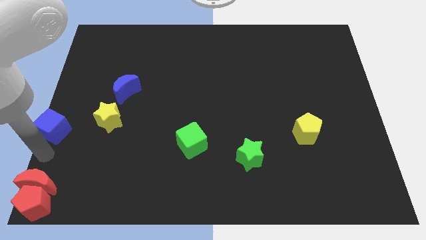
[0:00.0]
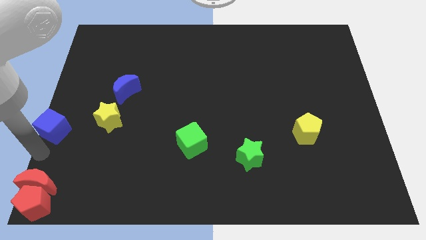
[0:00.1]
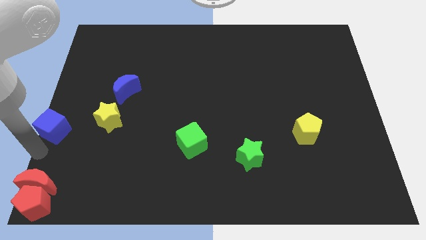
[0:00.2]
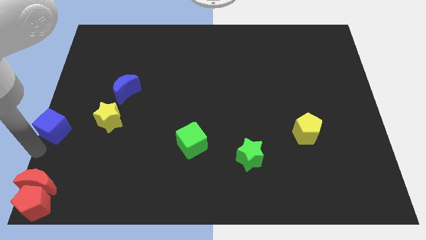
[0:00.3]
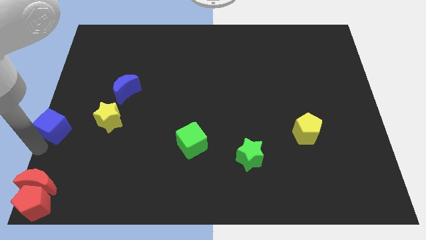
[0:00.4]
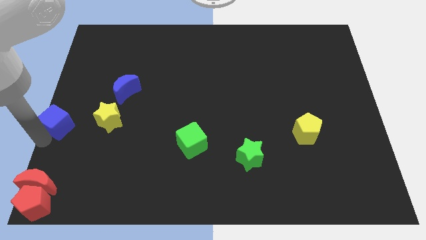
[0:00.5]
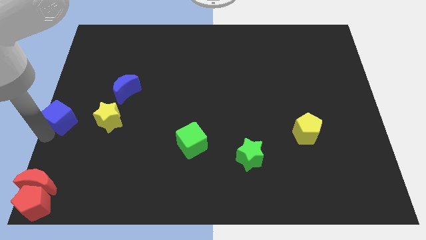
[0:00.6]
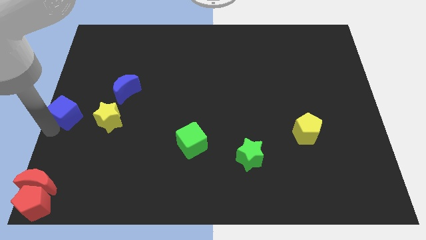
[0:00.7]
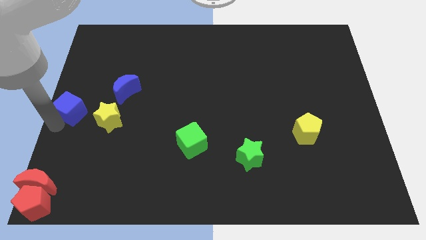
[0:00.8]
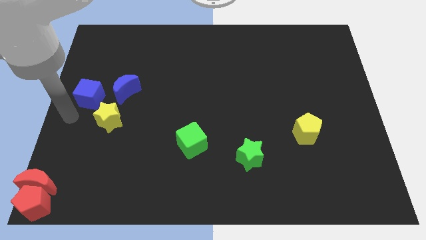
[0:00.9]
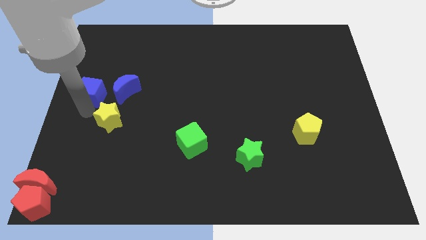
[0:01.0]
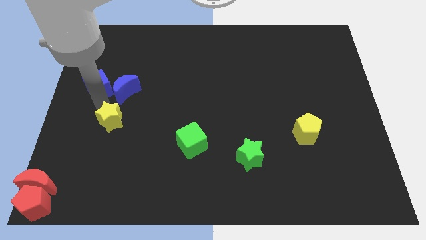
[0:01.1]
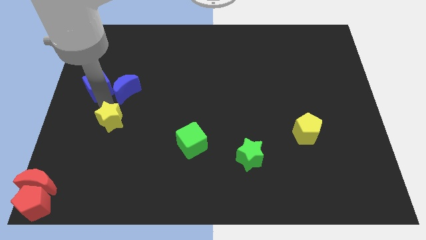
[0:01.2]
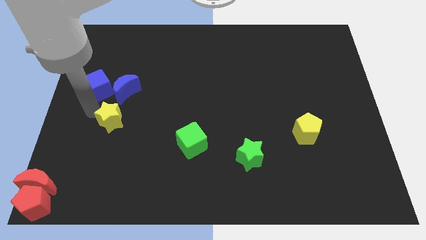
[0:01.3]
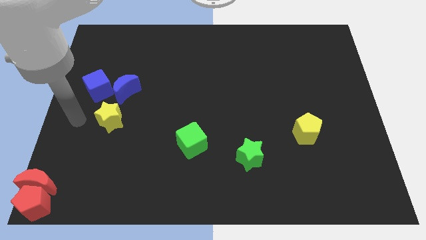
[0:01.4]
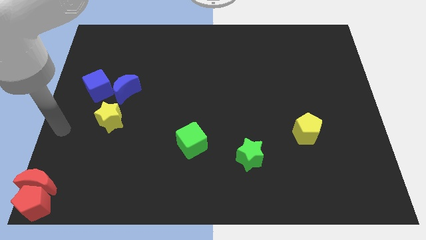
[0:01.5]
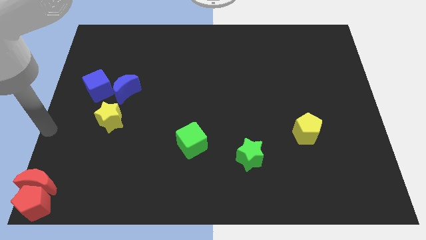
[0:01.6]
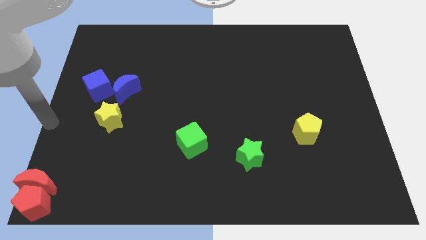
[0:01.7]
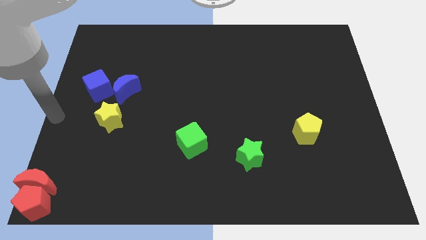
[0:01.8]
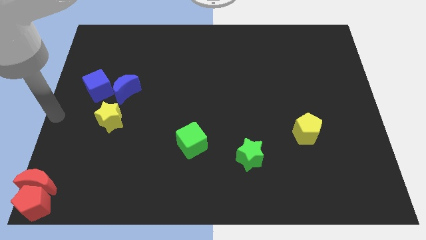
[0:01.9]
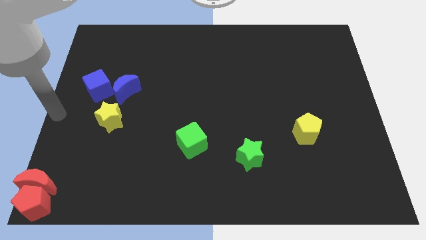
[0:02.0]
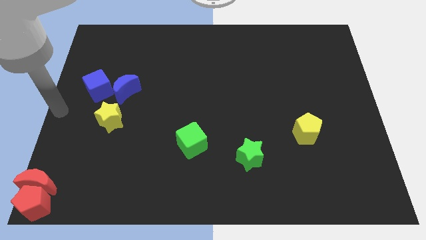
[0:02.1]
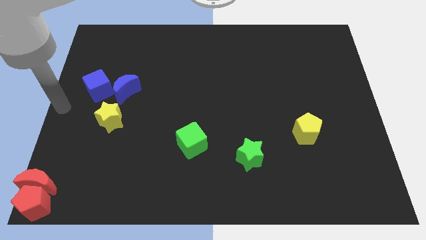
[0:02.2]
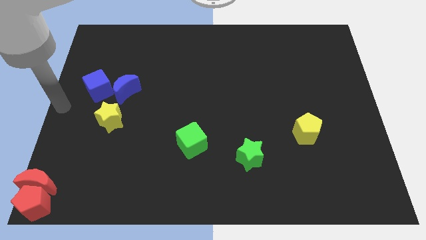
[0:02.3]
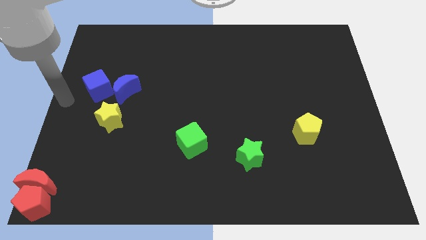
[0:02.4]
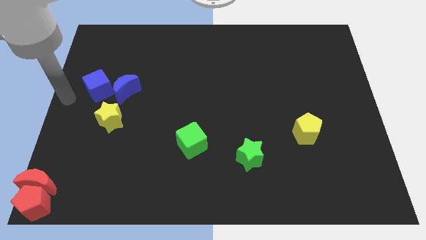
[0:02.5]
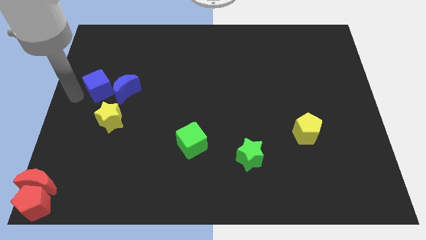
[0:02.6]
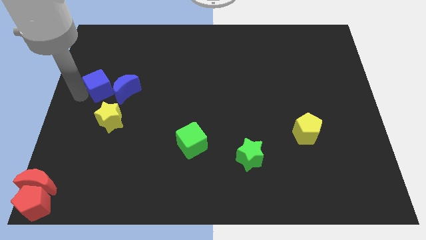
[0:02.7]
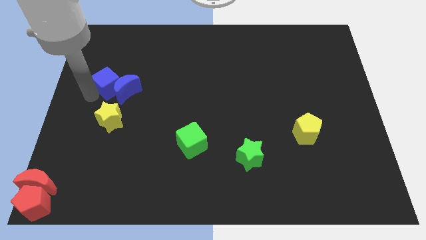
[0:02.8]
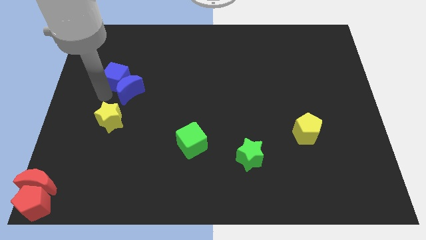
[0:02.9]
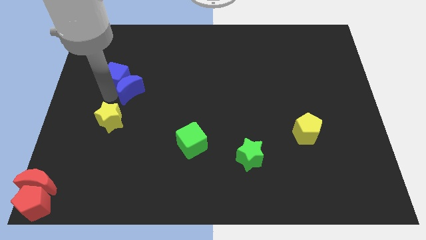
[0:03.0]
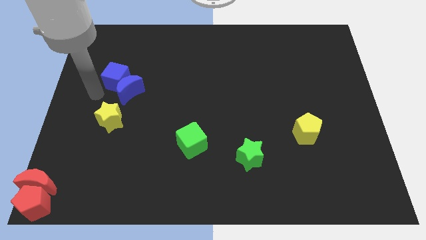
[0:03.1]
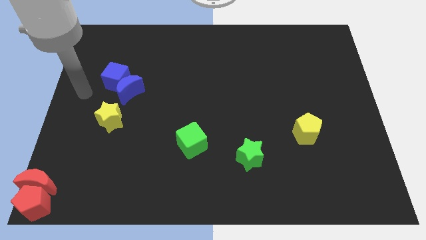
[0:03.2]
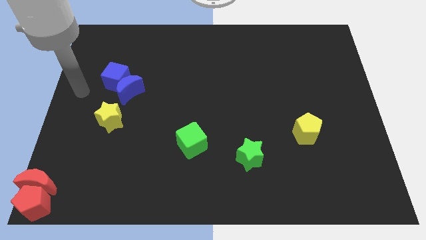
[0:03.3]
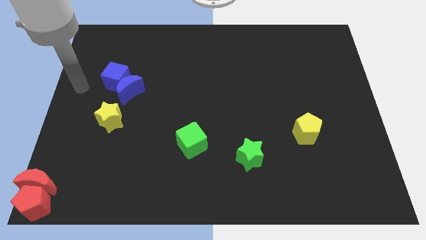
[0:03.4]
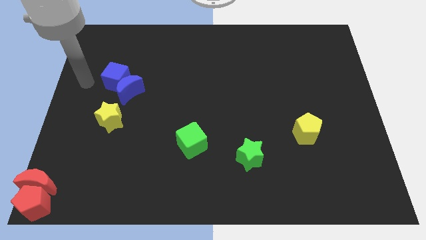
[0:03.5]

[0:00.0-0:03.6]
place the blue cube left to the blue moon

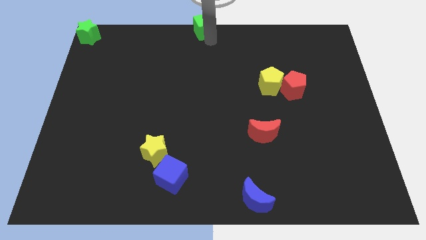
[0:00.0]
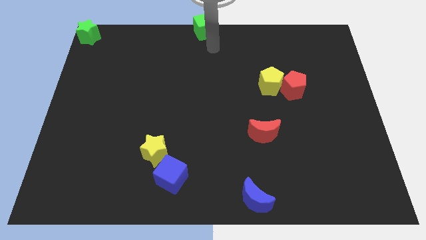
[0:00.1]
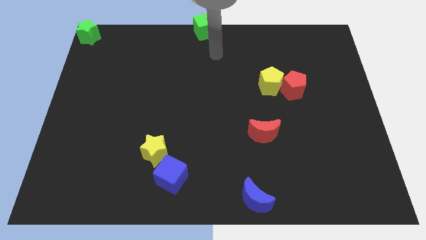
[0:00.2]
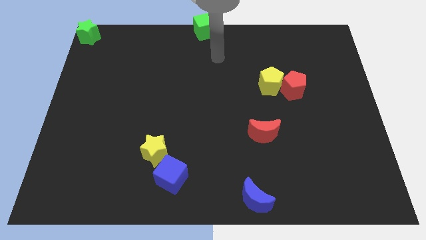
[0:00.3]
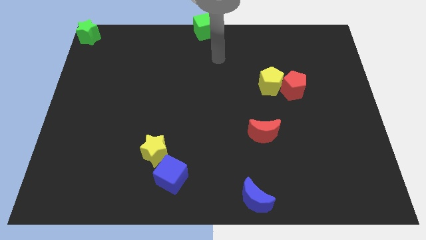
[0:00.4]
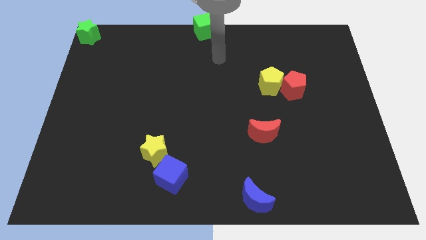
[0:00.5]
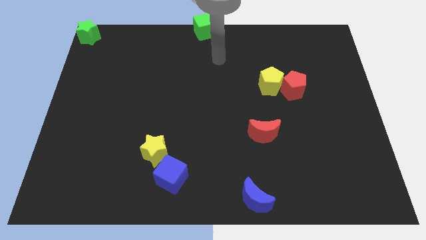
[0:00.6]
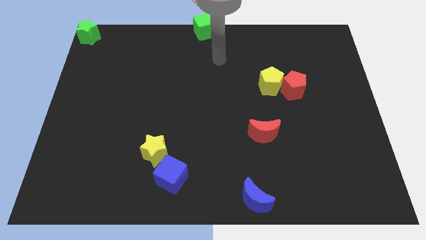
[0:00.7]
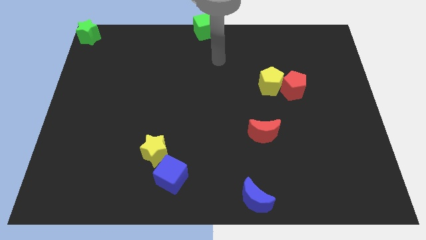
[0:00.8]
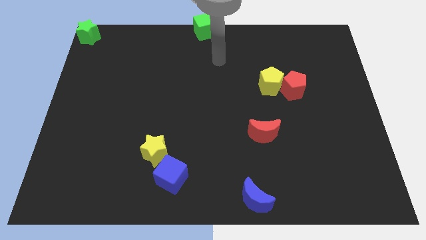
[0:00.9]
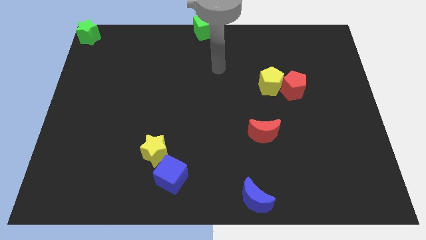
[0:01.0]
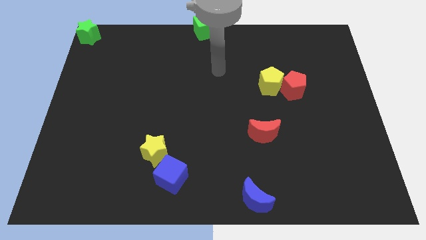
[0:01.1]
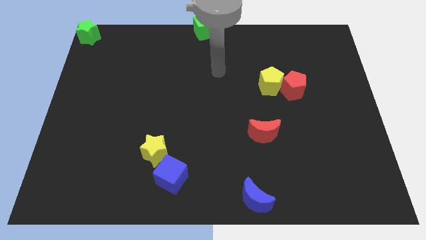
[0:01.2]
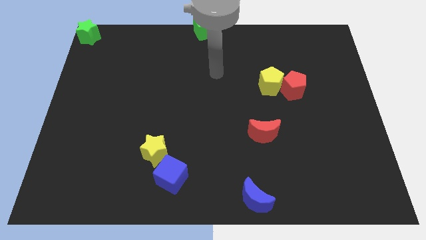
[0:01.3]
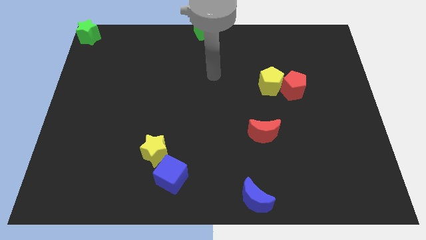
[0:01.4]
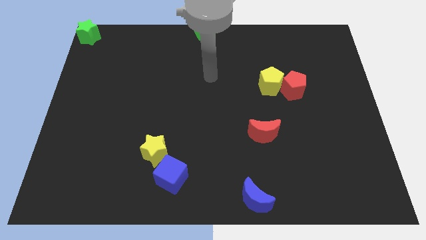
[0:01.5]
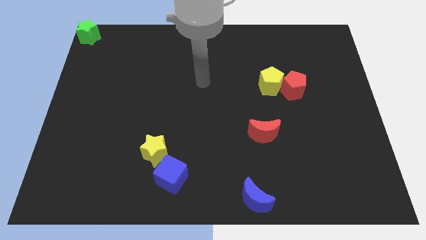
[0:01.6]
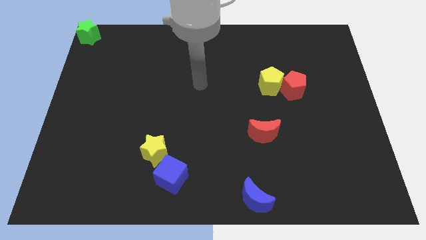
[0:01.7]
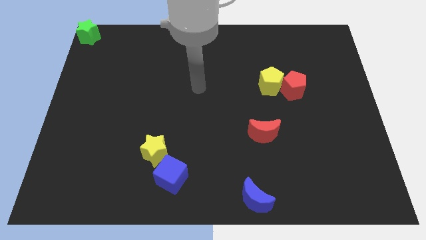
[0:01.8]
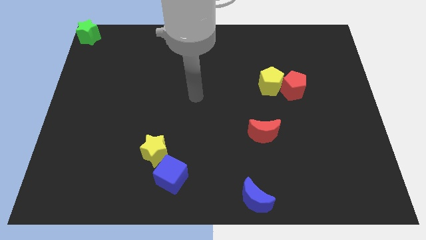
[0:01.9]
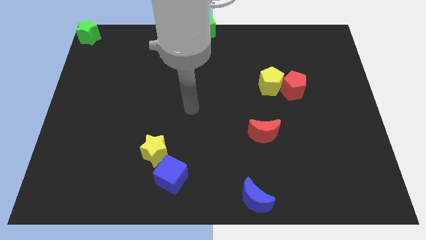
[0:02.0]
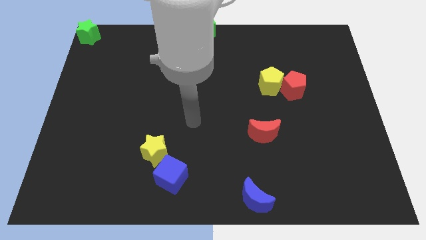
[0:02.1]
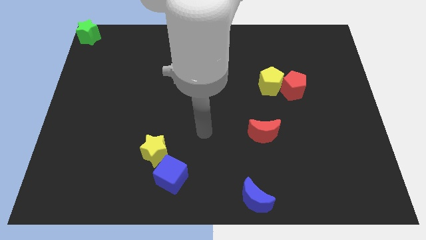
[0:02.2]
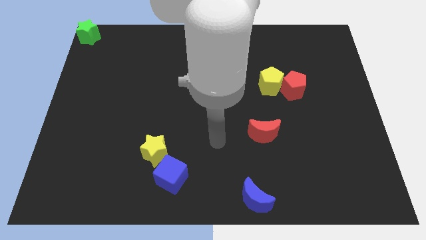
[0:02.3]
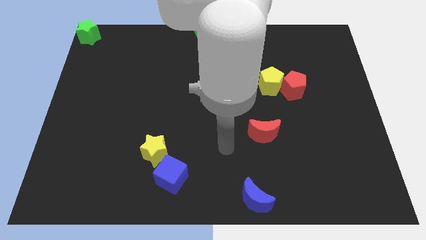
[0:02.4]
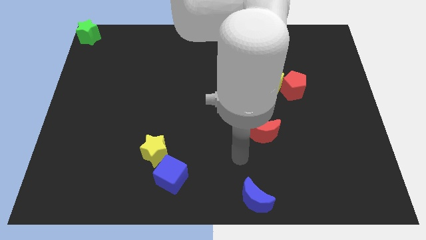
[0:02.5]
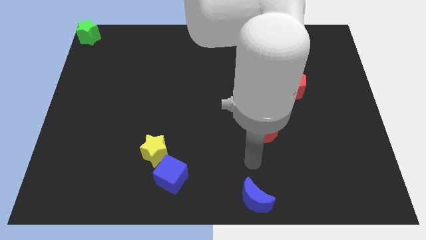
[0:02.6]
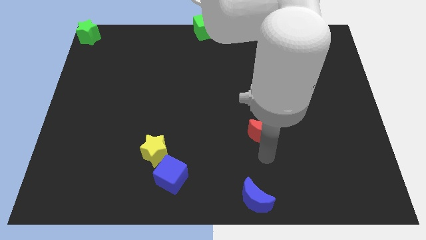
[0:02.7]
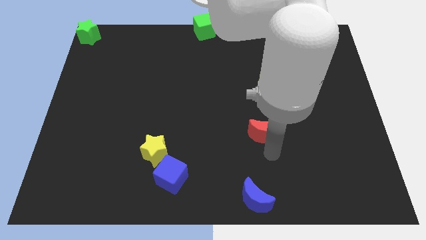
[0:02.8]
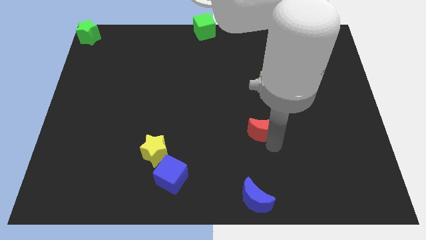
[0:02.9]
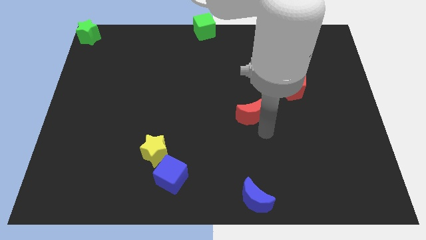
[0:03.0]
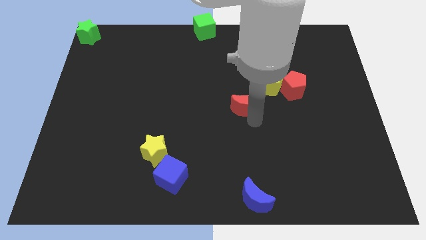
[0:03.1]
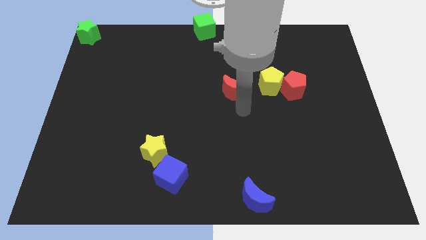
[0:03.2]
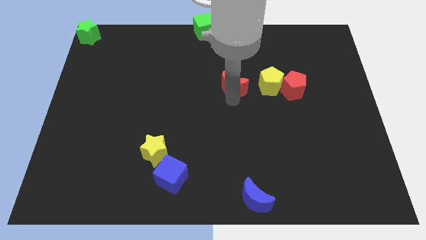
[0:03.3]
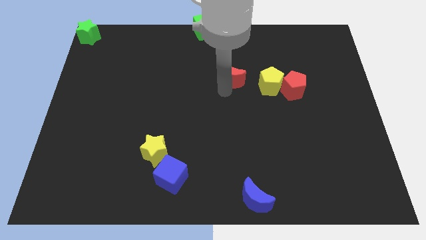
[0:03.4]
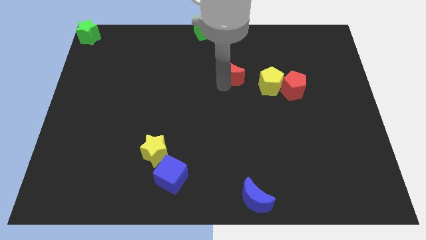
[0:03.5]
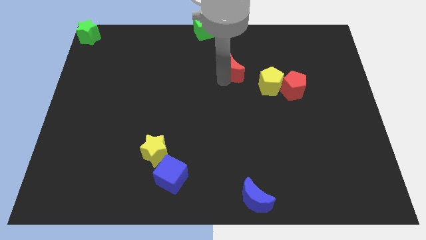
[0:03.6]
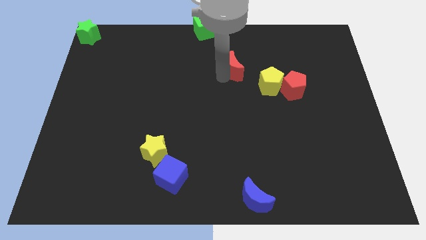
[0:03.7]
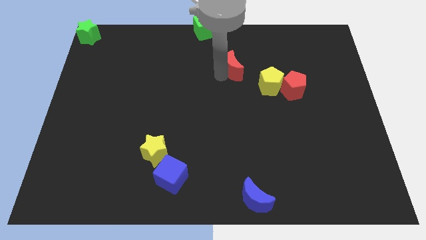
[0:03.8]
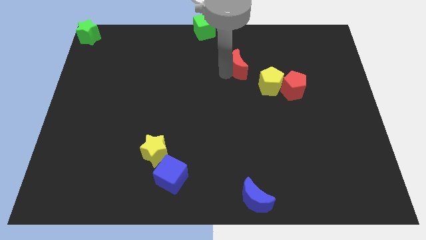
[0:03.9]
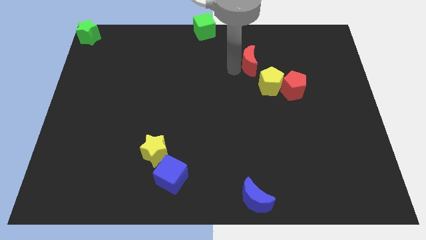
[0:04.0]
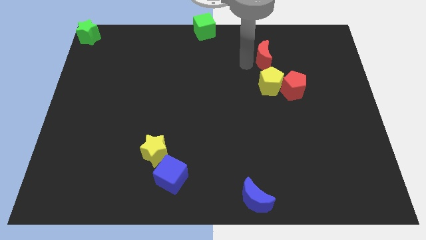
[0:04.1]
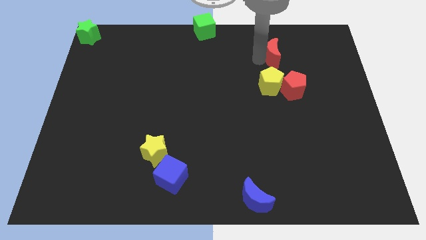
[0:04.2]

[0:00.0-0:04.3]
place the red crescent to the top side of the red pentagon

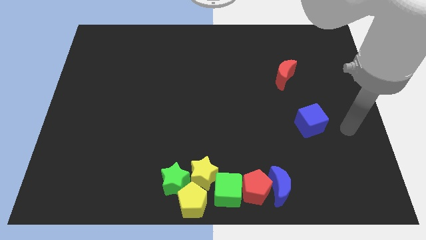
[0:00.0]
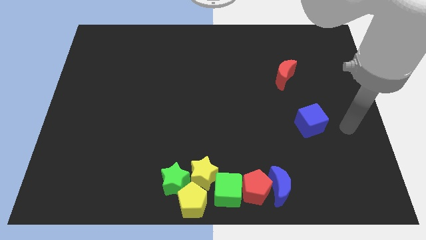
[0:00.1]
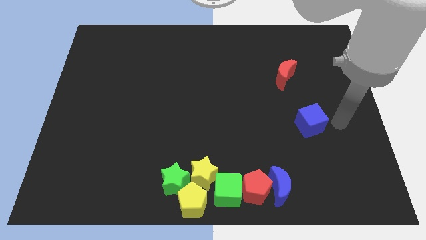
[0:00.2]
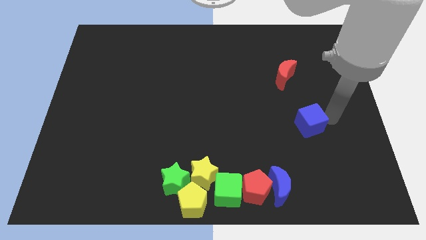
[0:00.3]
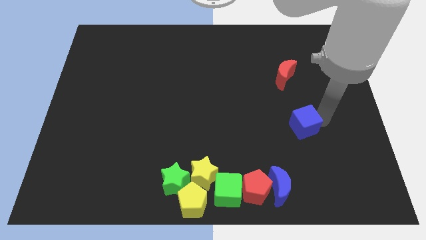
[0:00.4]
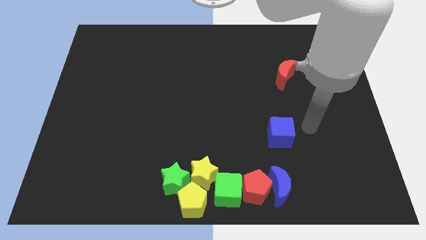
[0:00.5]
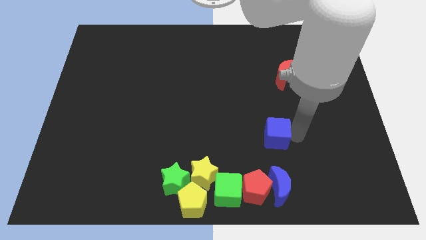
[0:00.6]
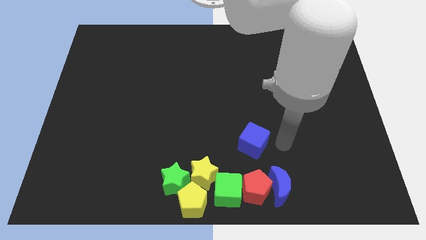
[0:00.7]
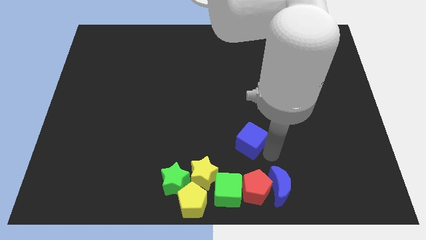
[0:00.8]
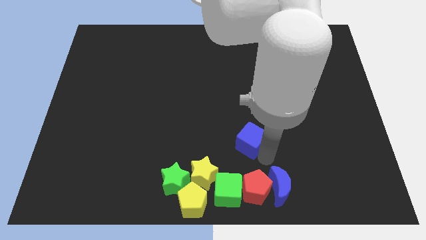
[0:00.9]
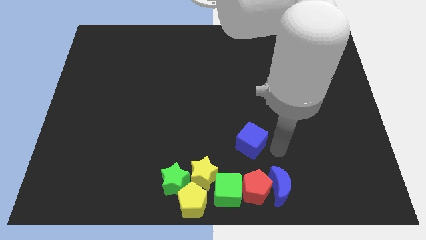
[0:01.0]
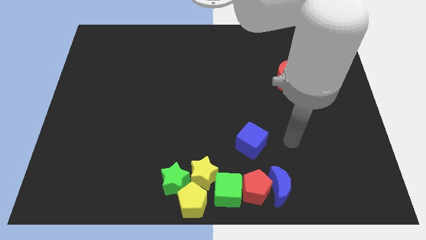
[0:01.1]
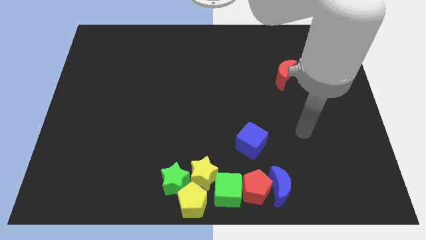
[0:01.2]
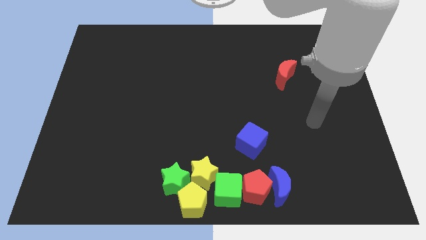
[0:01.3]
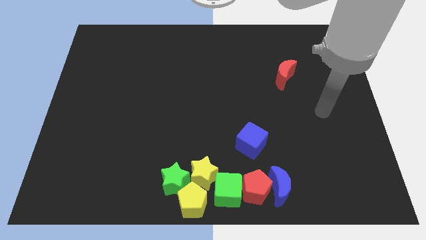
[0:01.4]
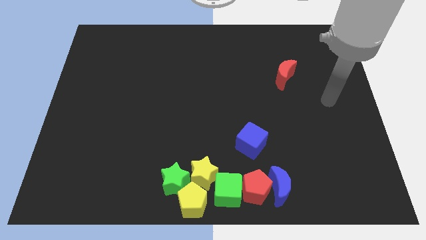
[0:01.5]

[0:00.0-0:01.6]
push blue cube on top of red pentagon
